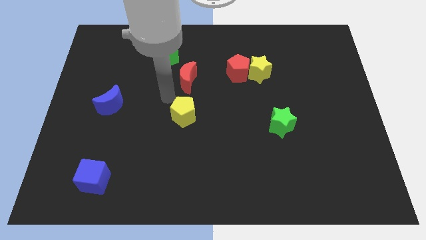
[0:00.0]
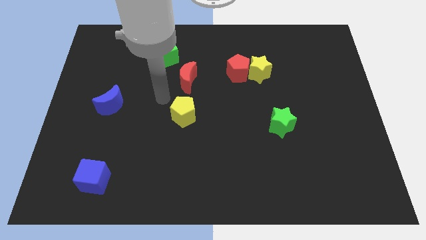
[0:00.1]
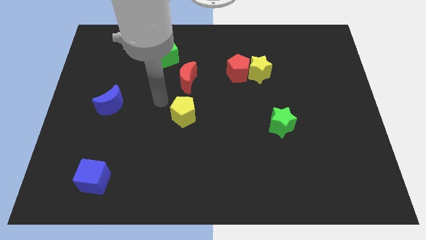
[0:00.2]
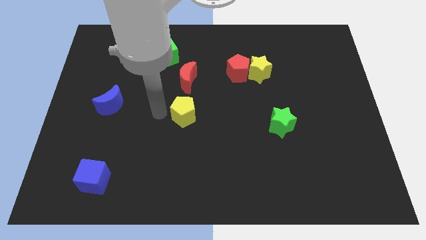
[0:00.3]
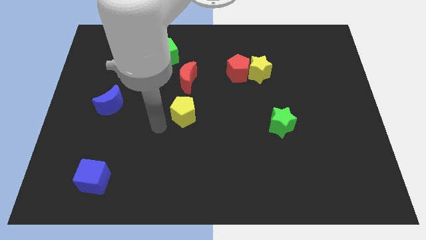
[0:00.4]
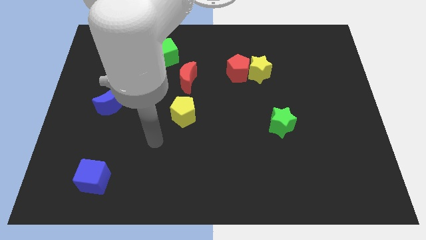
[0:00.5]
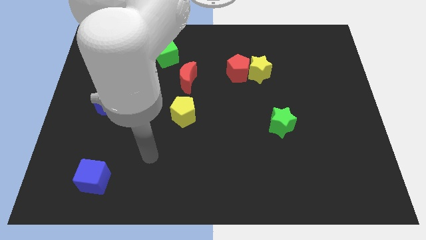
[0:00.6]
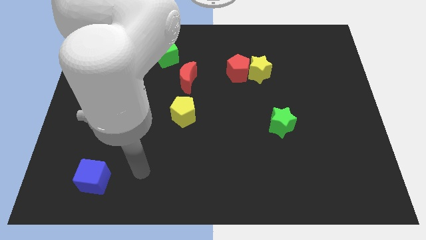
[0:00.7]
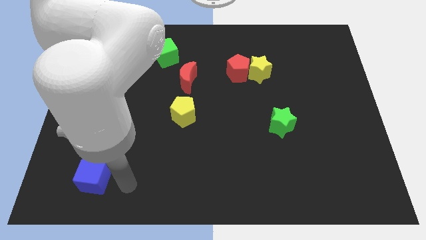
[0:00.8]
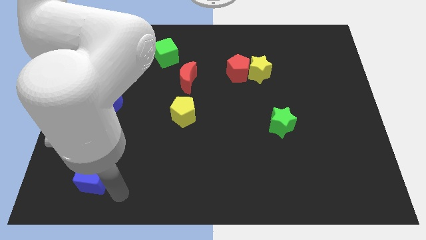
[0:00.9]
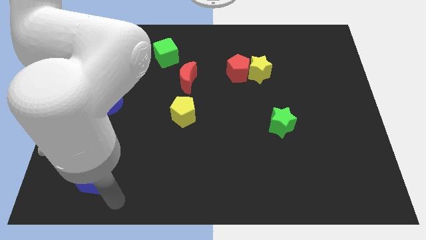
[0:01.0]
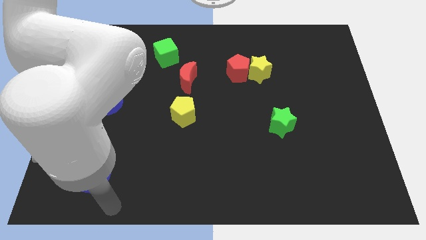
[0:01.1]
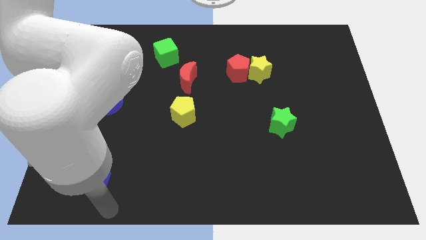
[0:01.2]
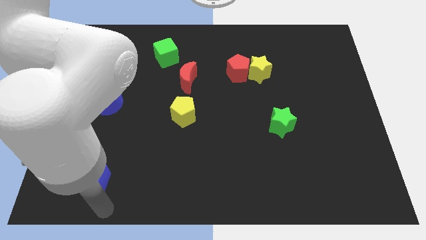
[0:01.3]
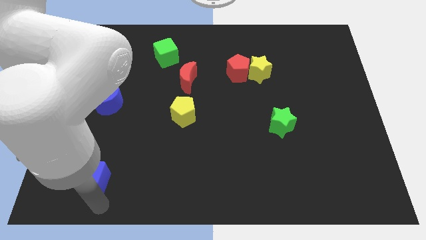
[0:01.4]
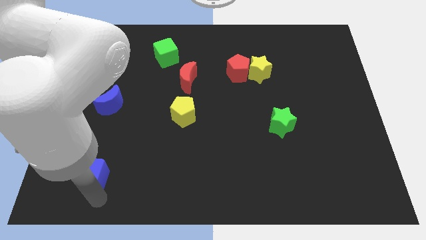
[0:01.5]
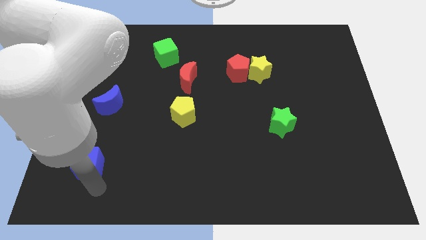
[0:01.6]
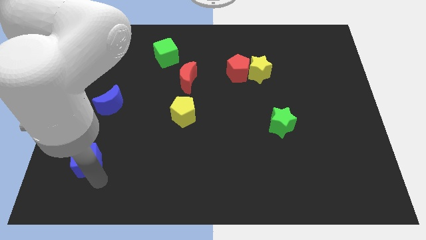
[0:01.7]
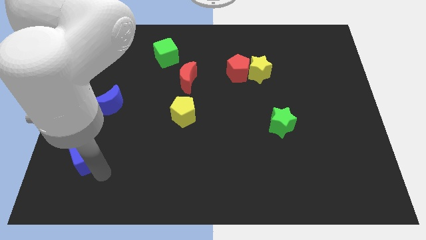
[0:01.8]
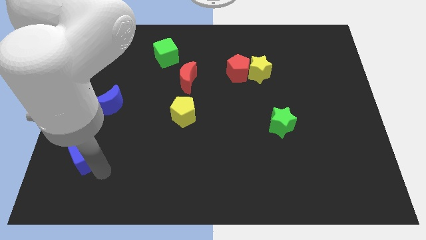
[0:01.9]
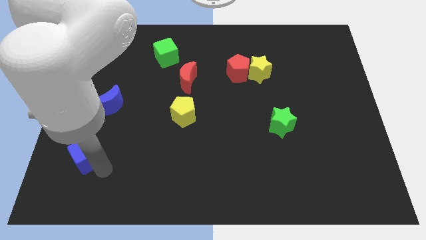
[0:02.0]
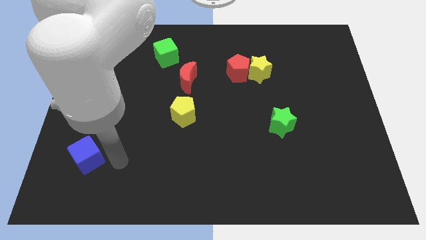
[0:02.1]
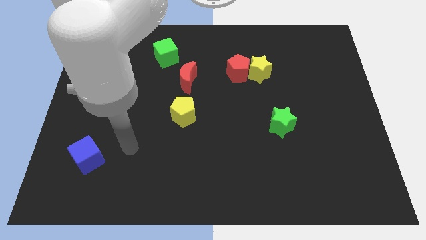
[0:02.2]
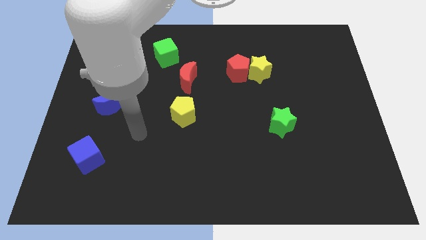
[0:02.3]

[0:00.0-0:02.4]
go and push the blue cube

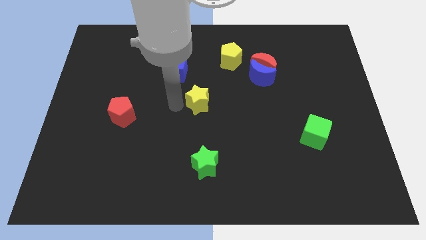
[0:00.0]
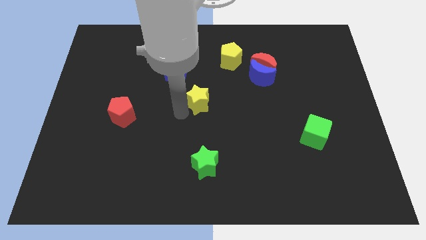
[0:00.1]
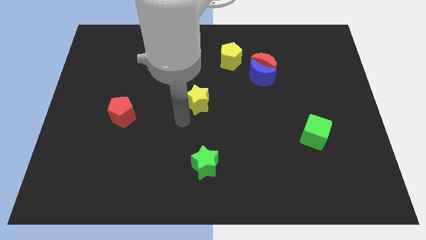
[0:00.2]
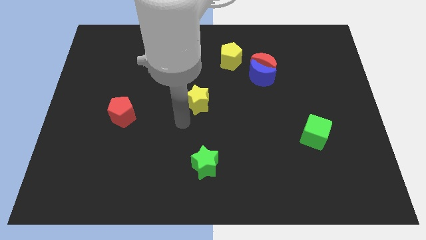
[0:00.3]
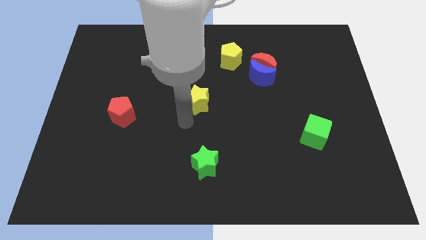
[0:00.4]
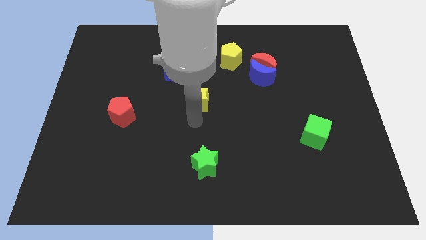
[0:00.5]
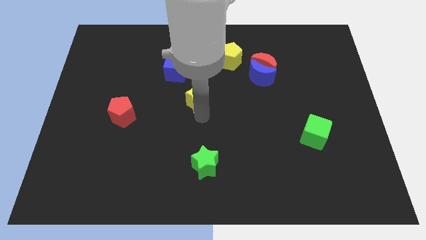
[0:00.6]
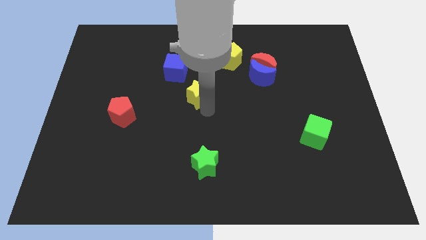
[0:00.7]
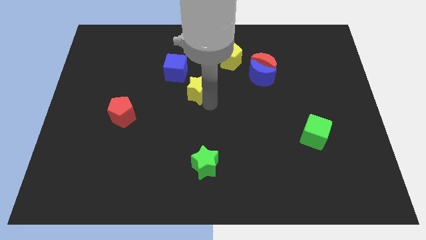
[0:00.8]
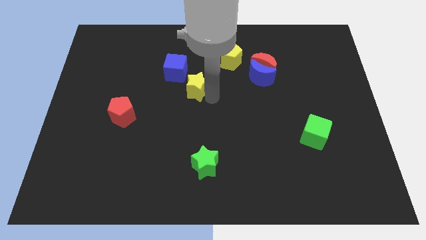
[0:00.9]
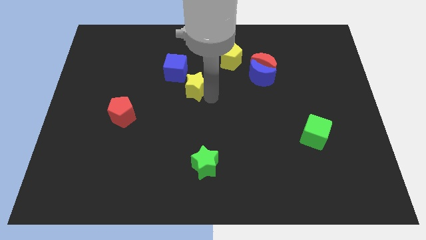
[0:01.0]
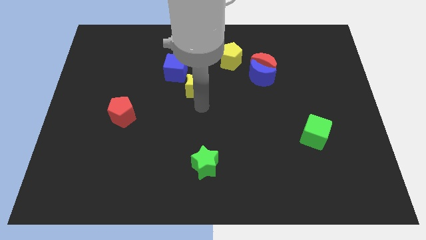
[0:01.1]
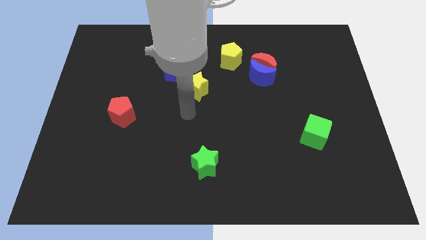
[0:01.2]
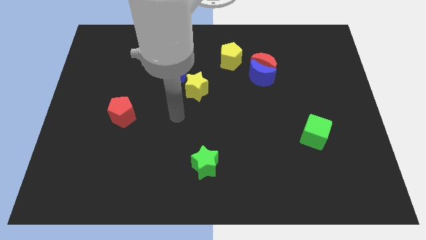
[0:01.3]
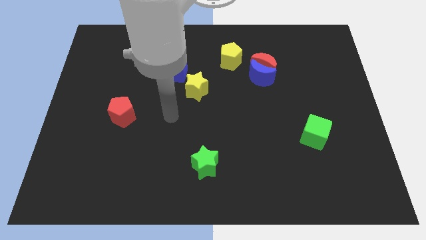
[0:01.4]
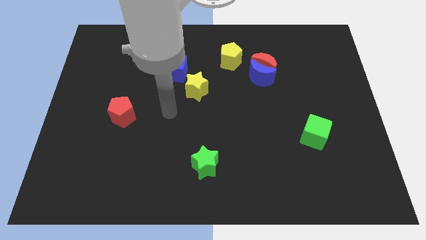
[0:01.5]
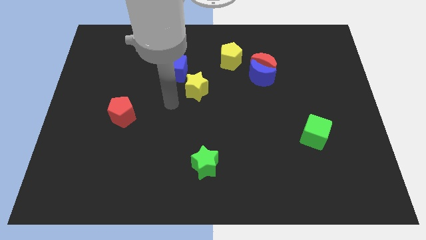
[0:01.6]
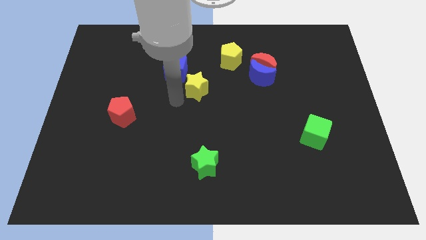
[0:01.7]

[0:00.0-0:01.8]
push the yellow star close to the blue cube

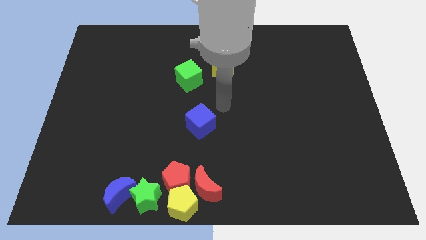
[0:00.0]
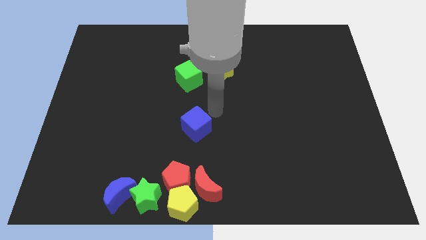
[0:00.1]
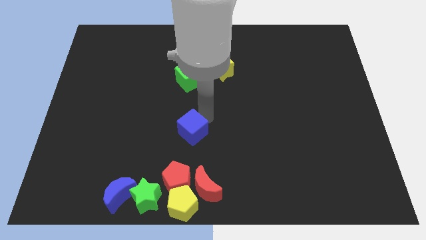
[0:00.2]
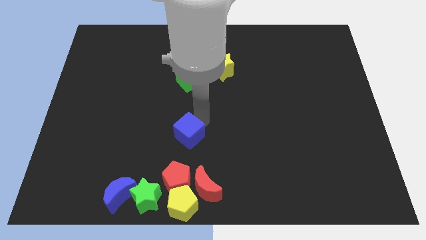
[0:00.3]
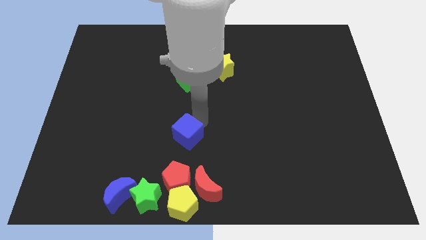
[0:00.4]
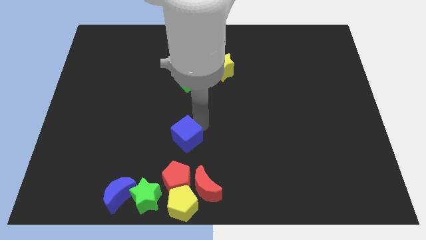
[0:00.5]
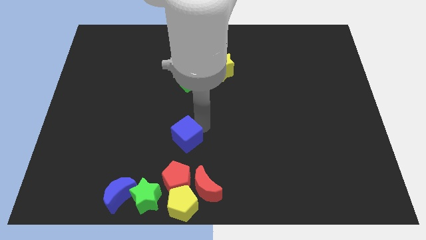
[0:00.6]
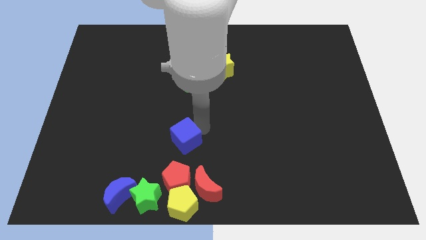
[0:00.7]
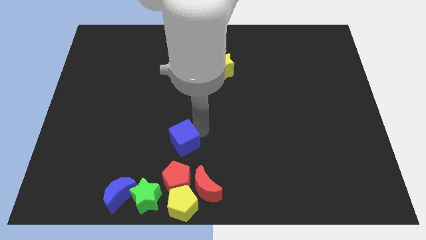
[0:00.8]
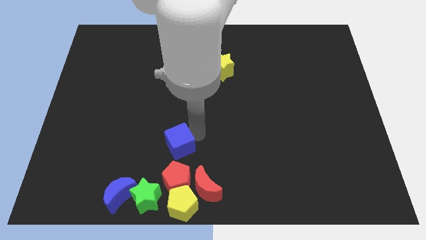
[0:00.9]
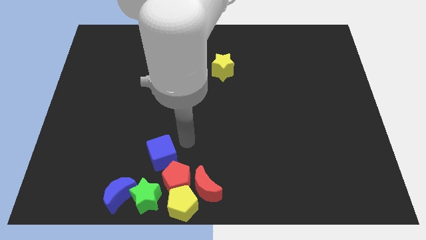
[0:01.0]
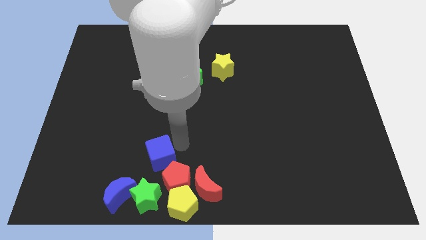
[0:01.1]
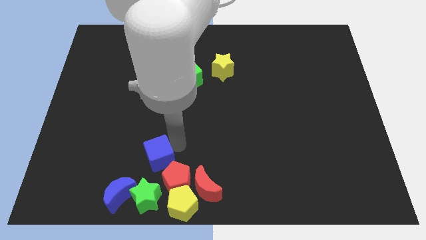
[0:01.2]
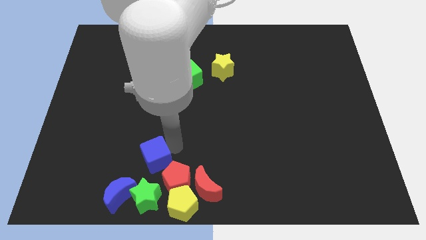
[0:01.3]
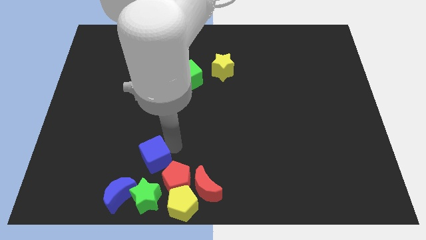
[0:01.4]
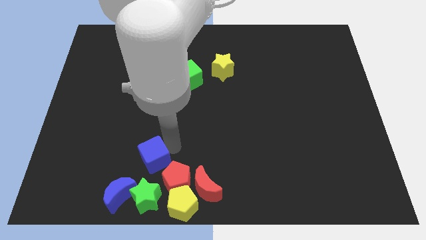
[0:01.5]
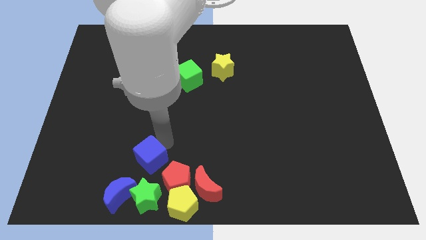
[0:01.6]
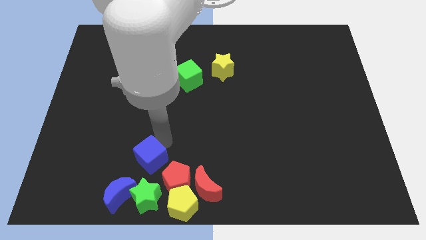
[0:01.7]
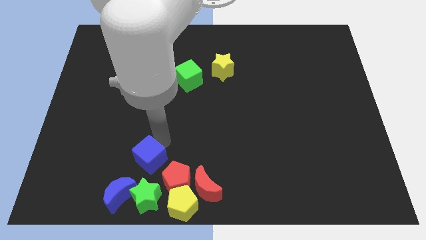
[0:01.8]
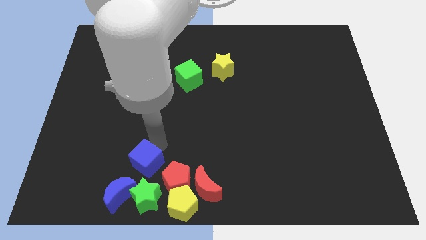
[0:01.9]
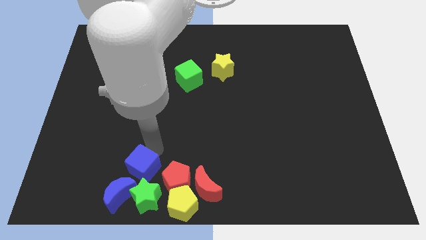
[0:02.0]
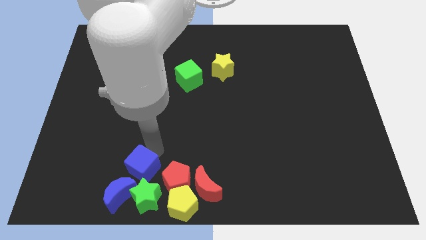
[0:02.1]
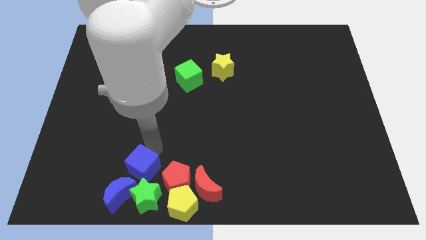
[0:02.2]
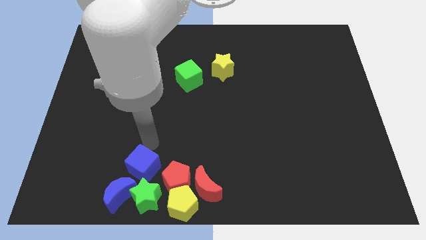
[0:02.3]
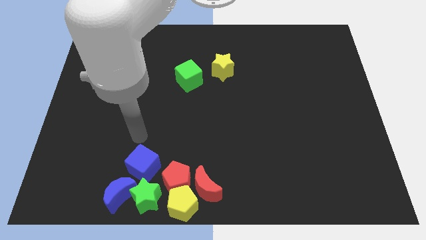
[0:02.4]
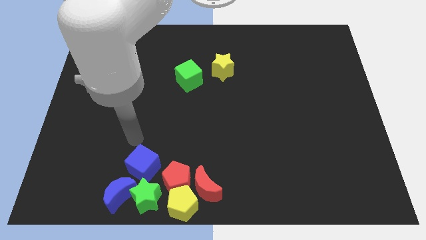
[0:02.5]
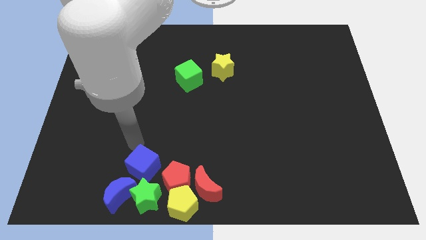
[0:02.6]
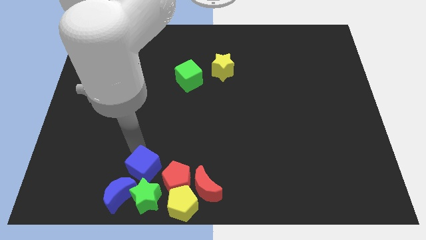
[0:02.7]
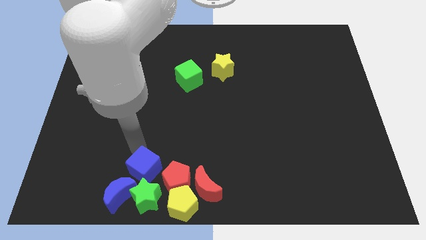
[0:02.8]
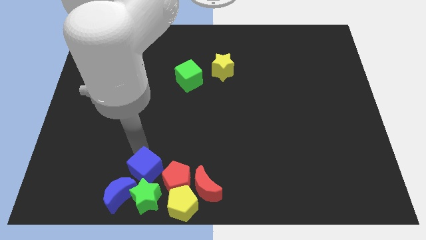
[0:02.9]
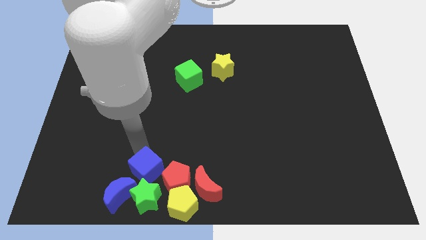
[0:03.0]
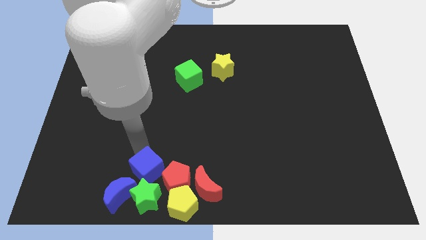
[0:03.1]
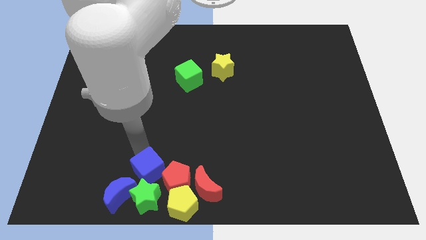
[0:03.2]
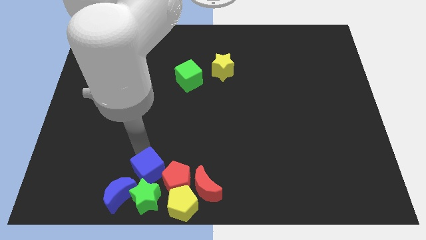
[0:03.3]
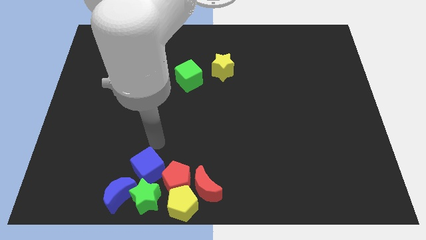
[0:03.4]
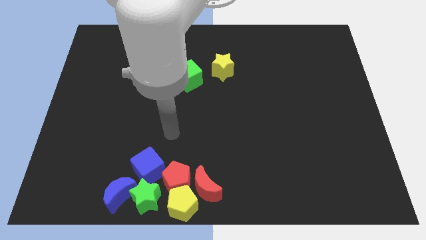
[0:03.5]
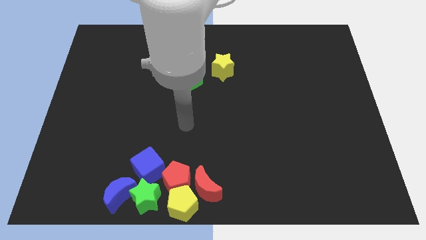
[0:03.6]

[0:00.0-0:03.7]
put blue cube above green star

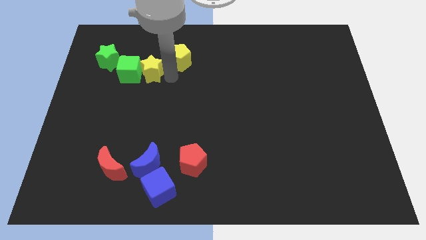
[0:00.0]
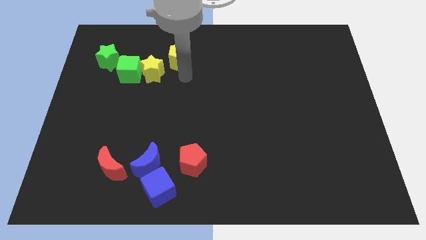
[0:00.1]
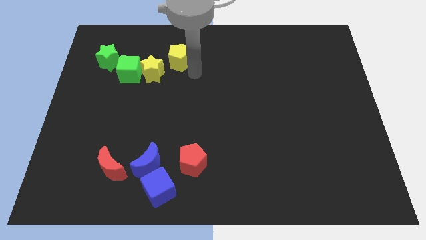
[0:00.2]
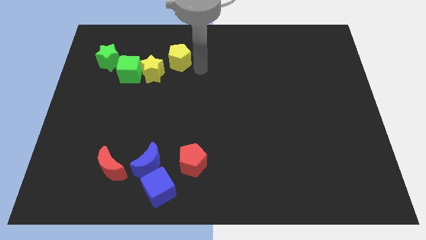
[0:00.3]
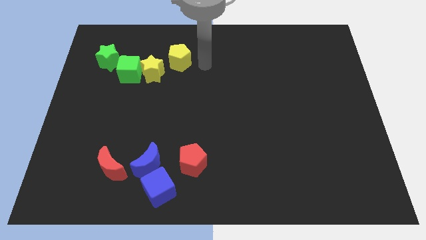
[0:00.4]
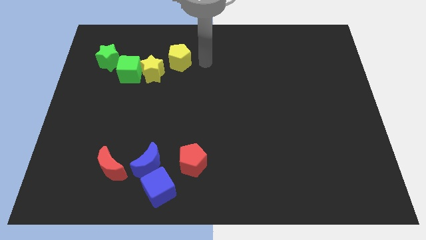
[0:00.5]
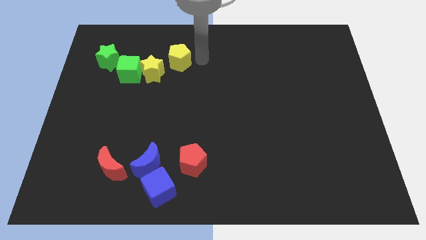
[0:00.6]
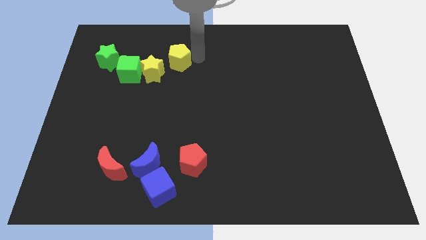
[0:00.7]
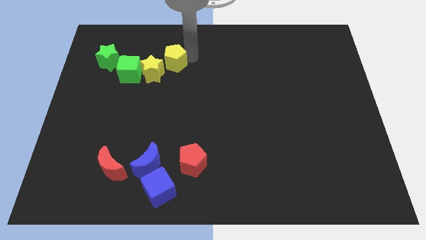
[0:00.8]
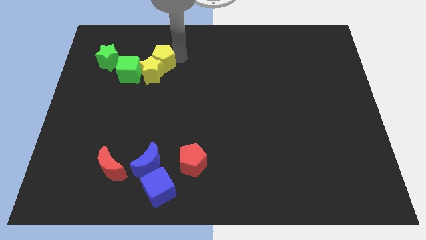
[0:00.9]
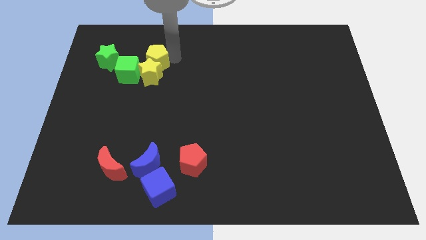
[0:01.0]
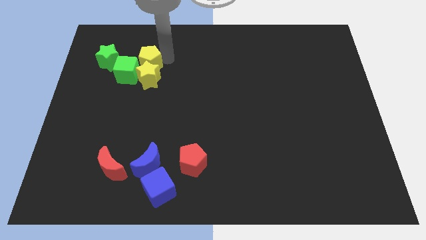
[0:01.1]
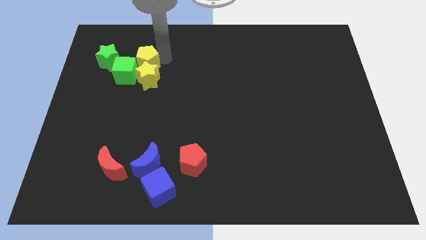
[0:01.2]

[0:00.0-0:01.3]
push the yellow pentagon to the top of the yellow star
